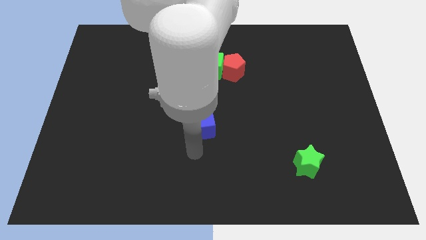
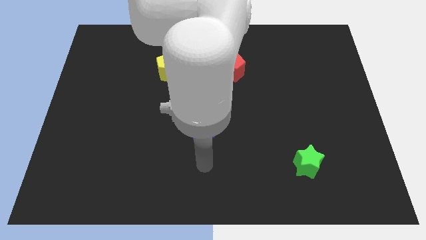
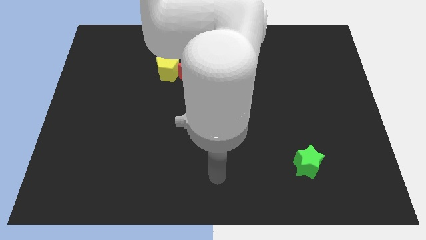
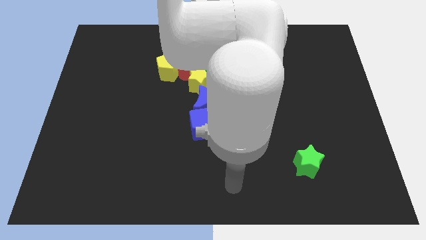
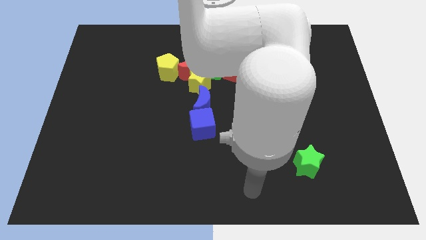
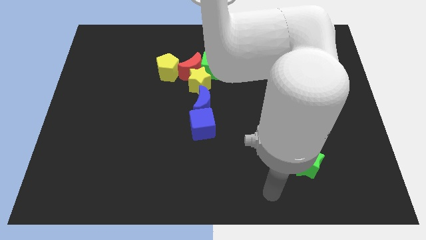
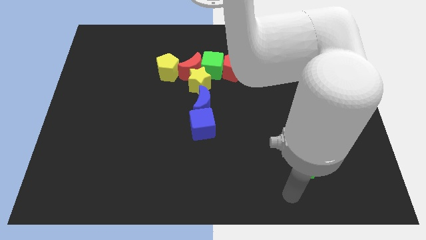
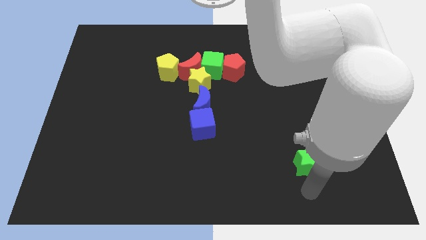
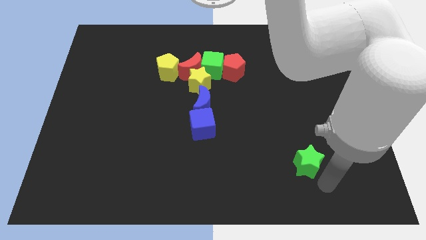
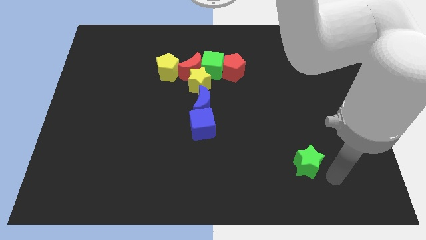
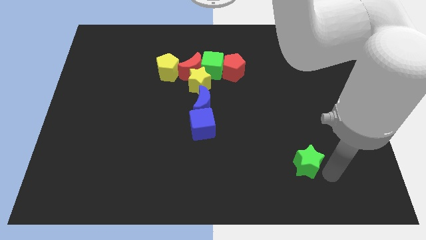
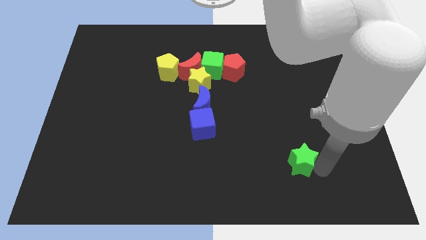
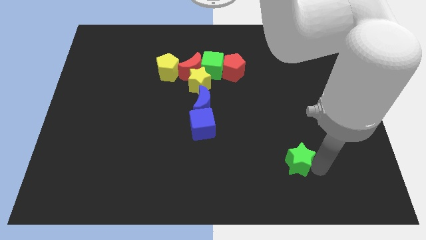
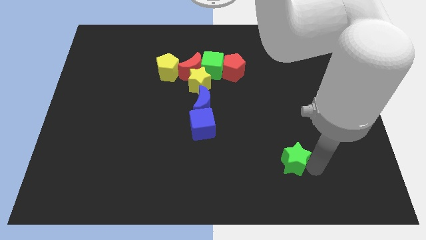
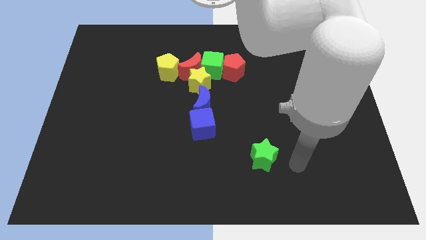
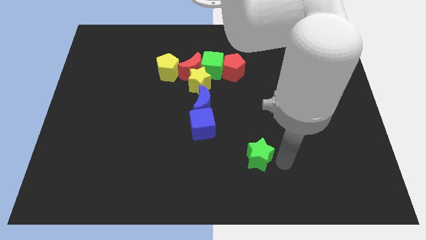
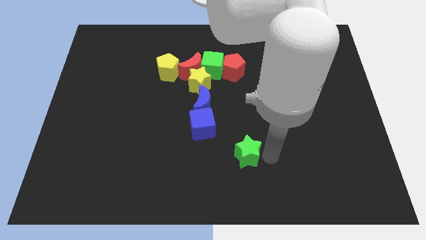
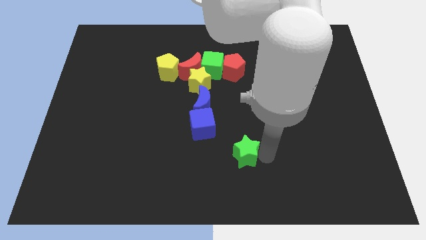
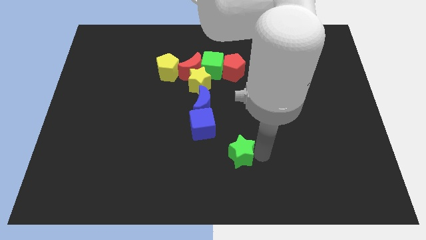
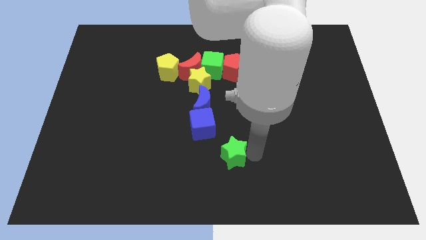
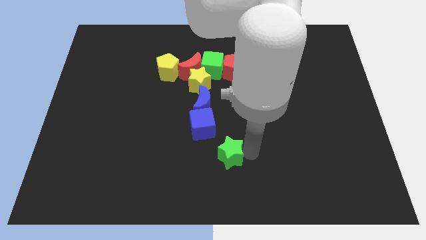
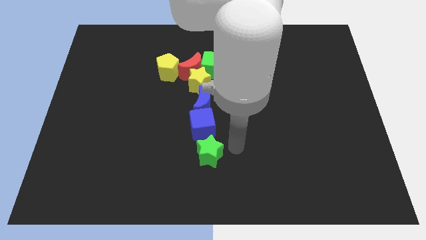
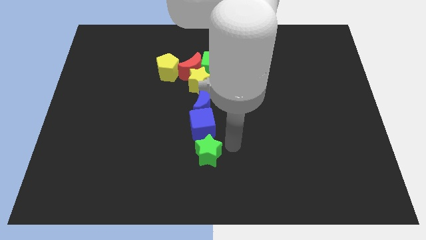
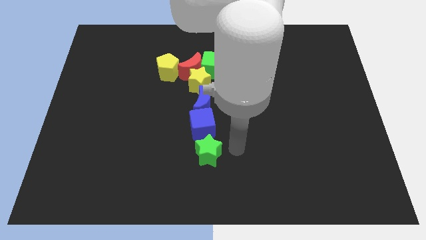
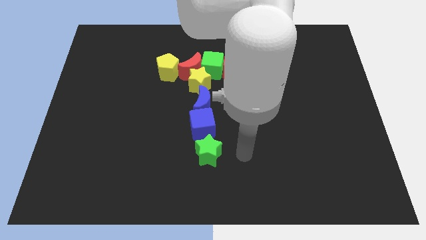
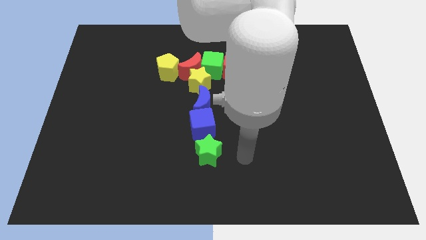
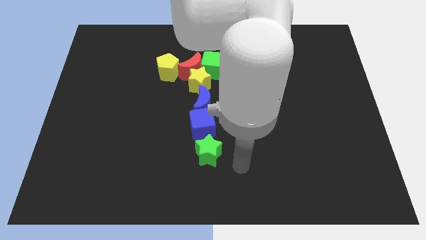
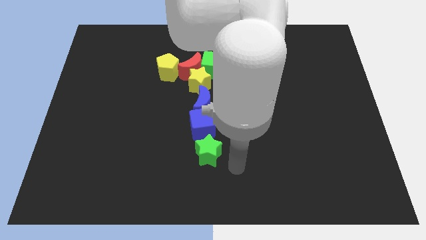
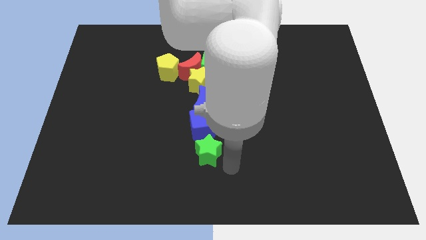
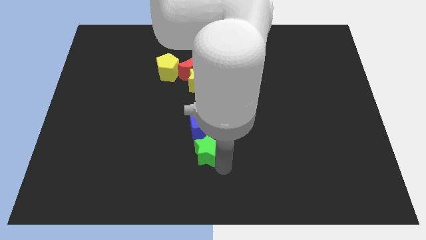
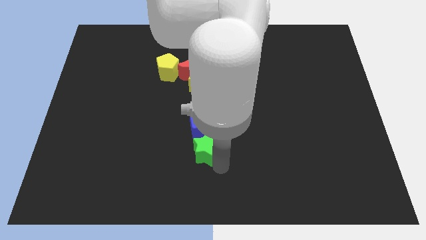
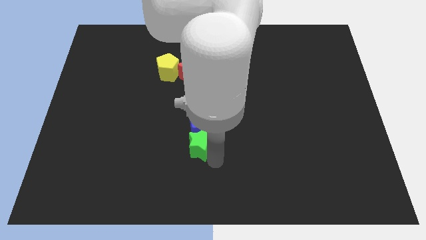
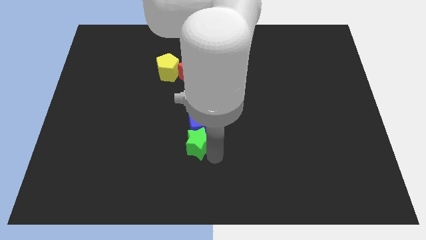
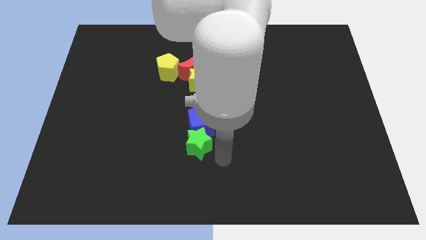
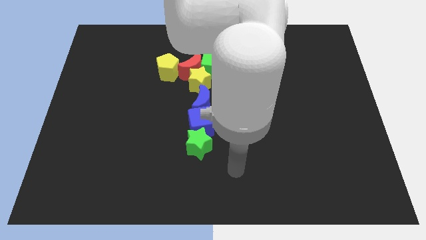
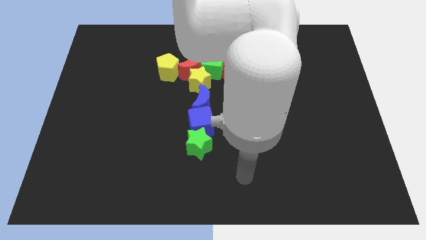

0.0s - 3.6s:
drag the green star into the bottom side of the blue cube

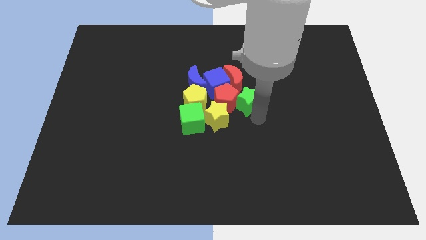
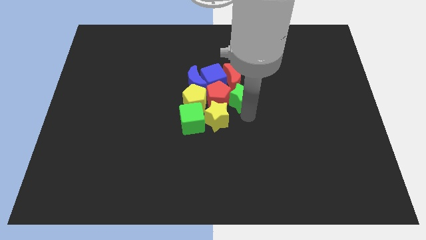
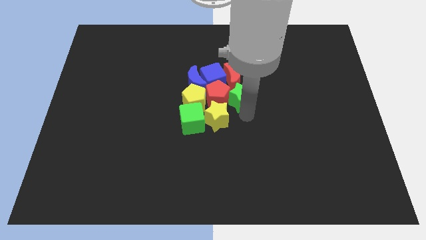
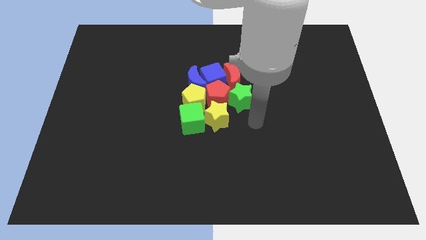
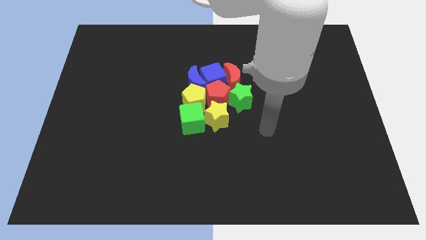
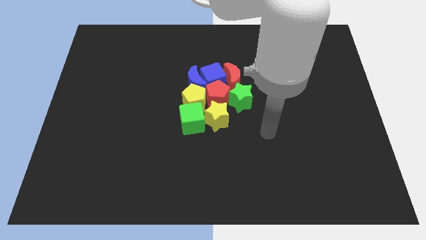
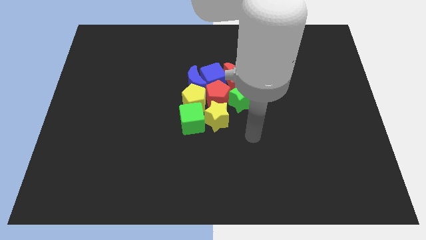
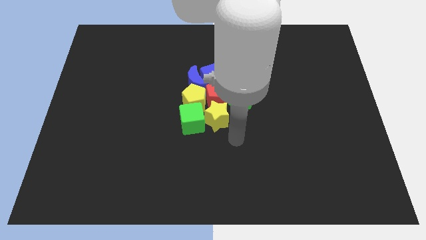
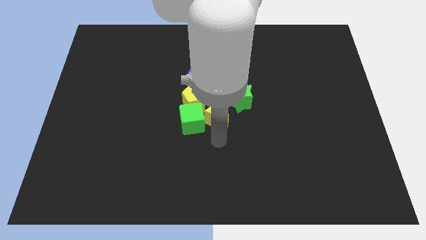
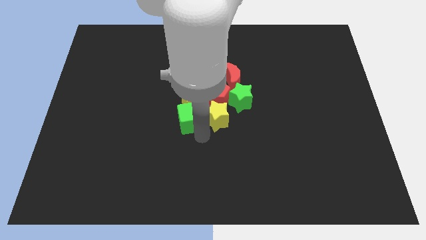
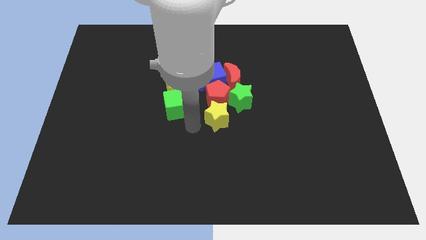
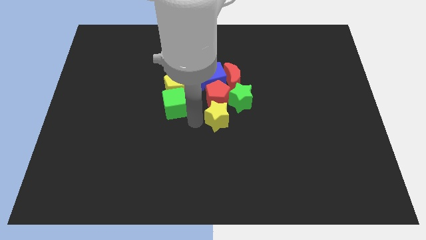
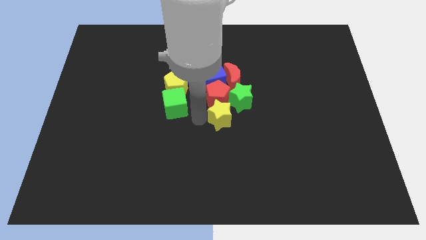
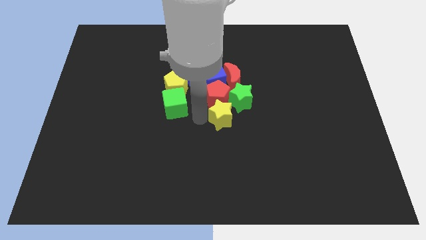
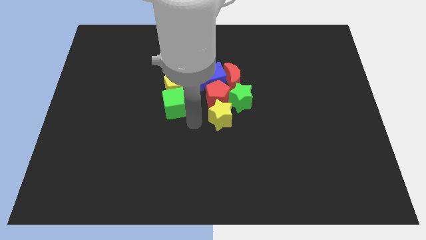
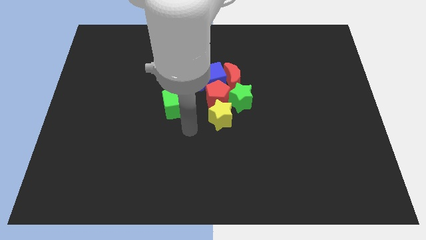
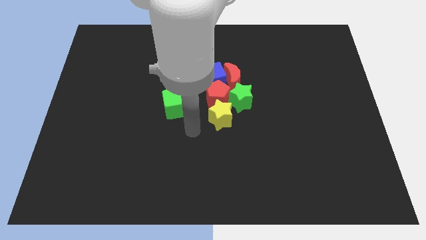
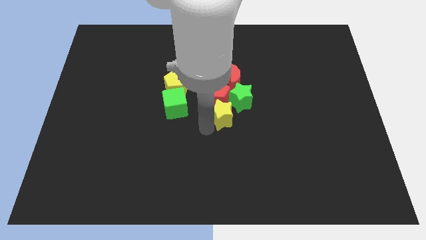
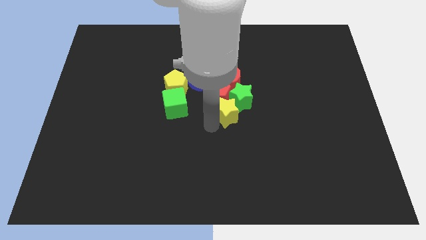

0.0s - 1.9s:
separate the green cube and yellow pentagon

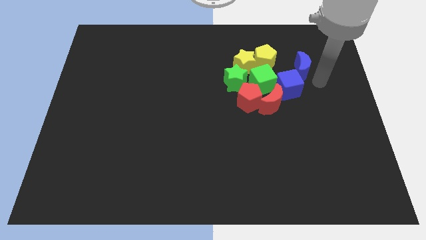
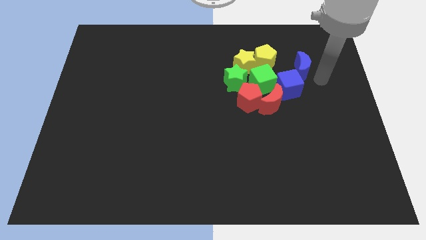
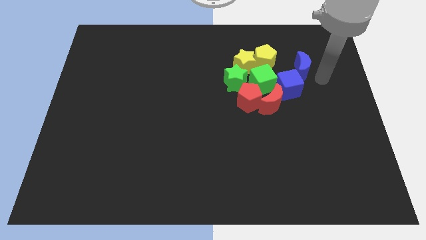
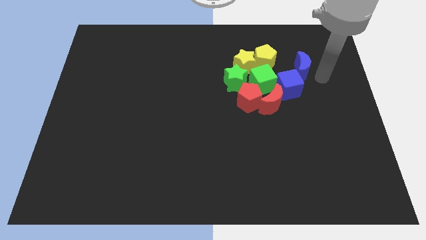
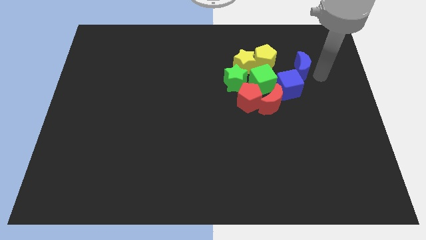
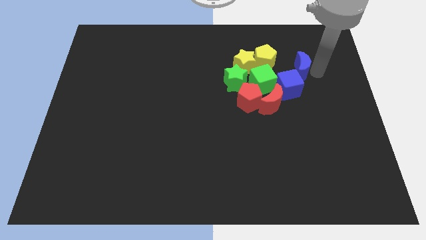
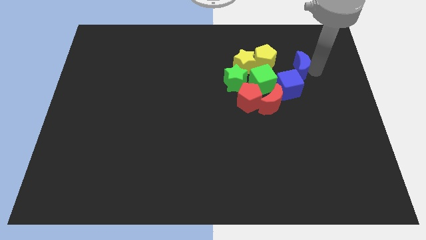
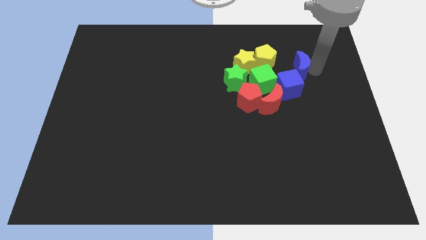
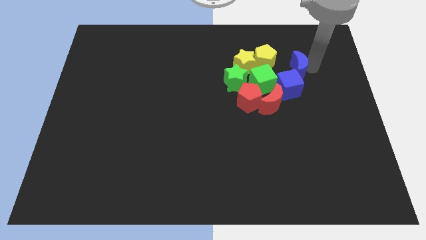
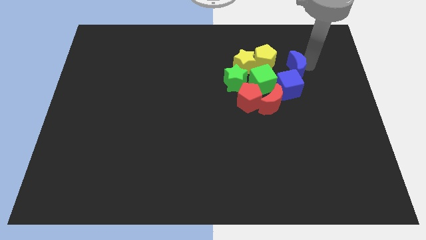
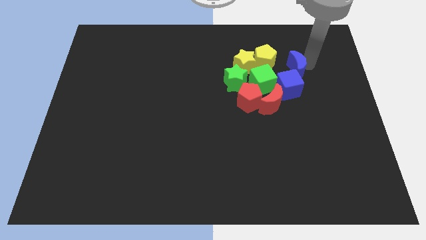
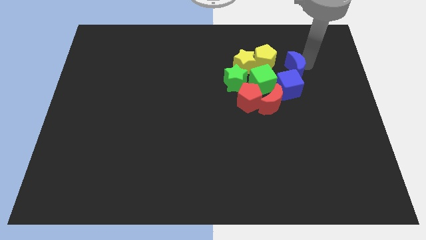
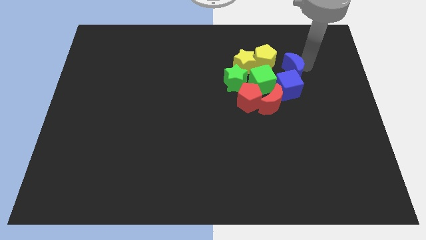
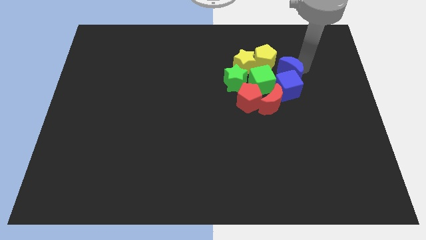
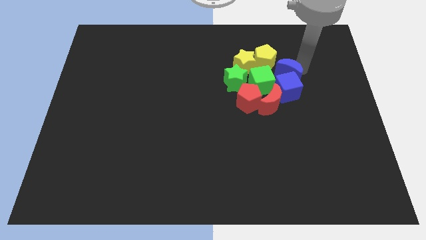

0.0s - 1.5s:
push blue crescent into blue cube

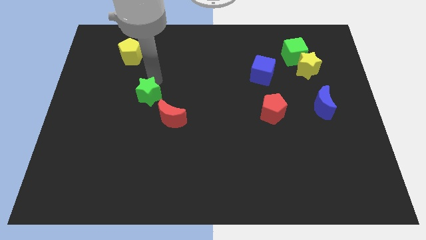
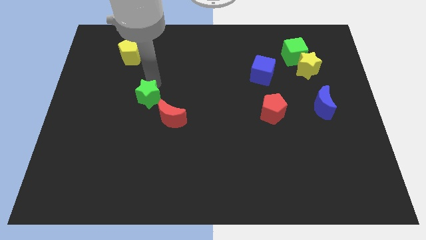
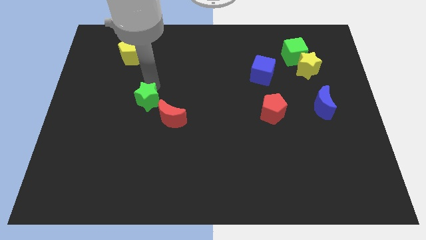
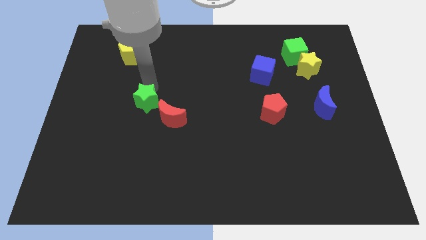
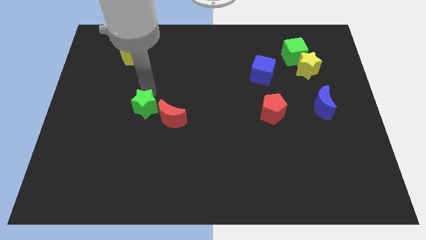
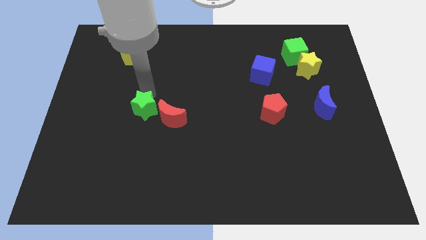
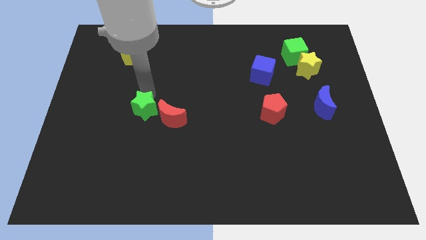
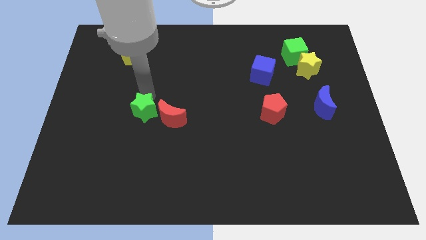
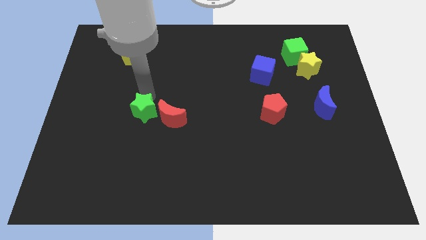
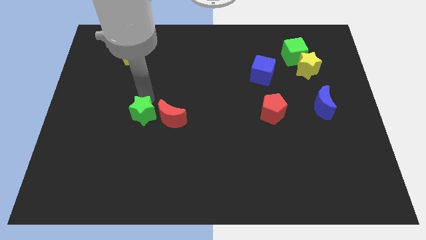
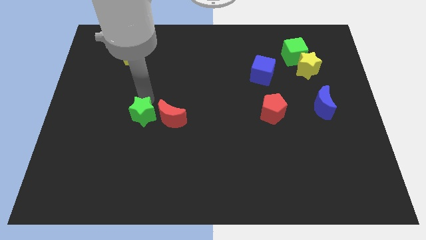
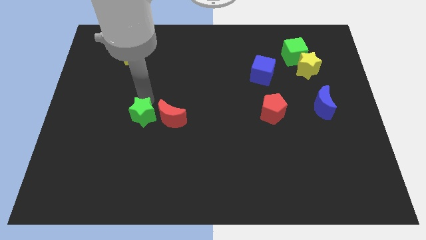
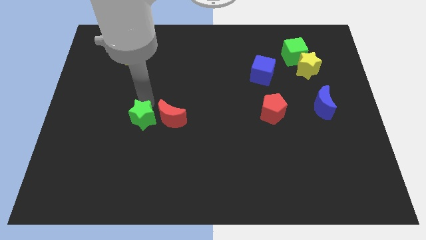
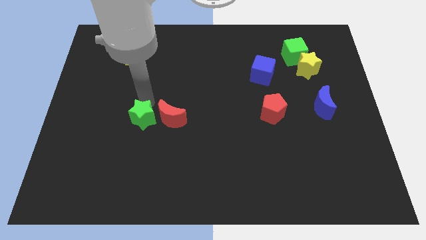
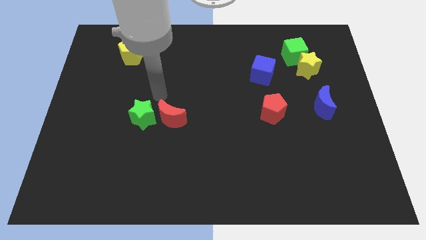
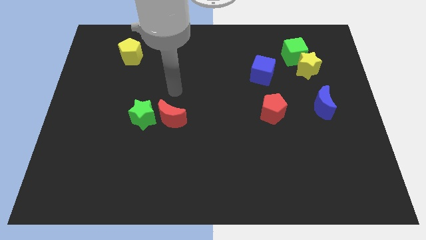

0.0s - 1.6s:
place the green star left to the red moon

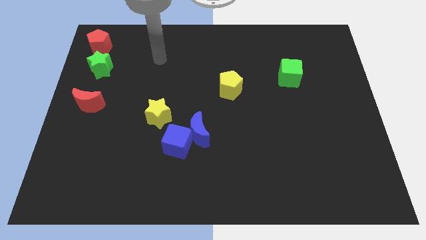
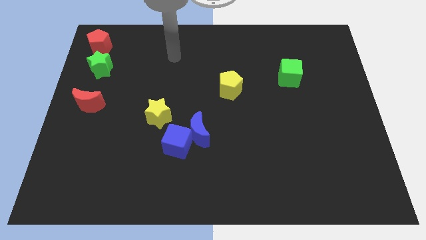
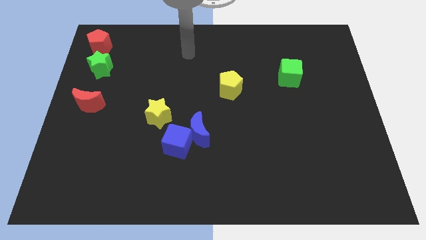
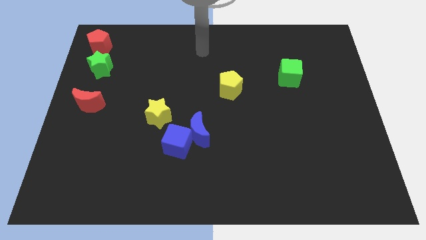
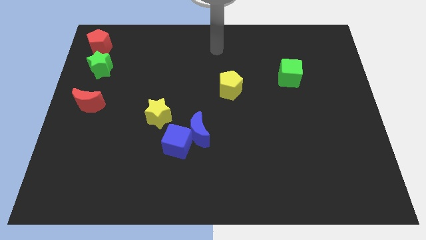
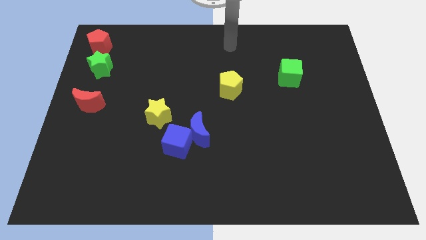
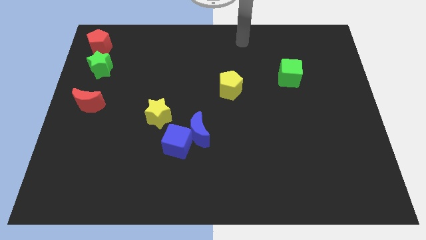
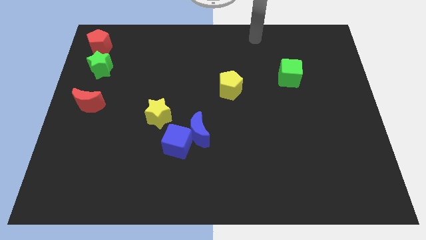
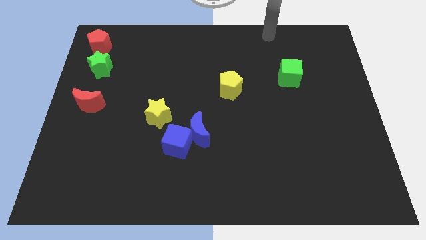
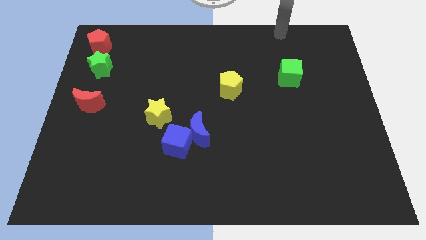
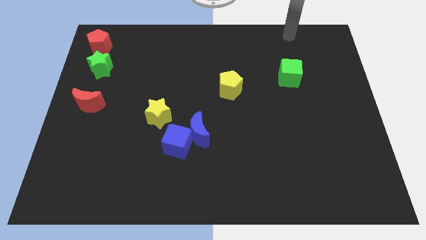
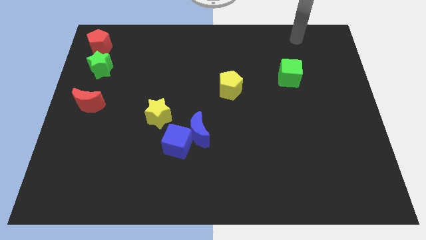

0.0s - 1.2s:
move arm towards the top right corner
